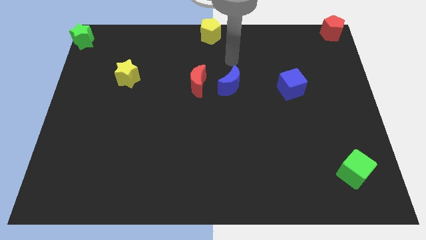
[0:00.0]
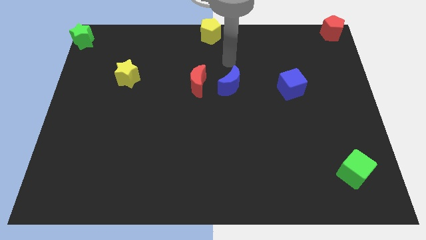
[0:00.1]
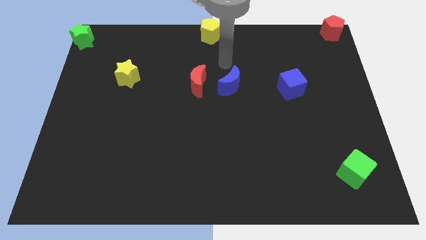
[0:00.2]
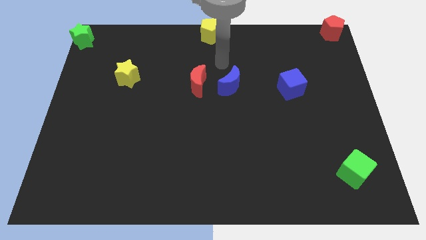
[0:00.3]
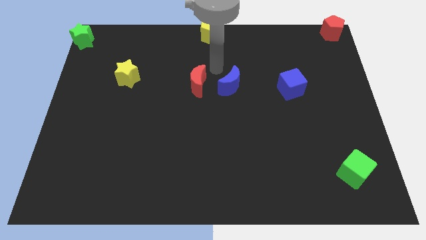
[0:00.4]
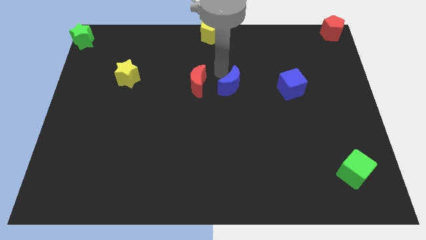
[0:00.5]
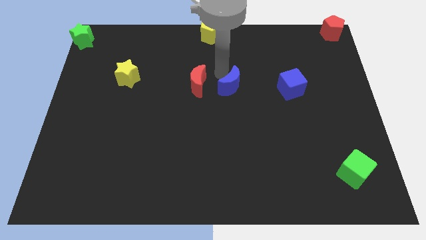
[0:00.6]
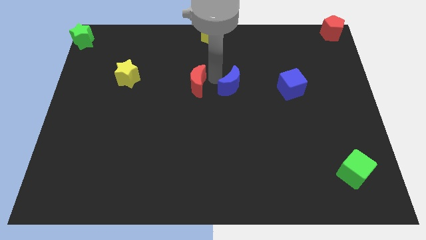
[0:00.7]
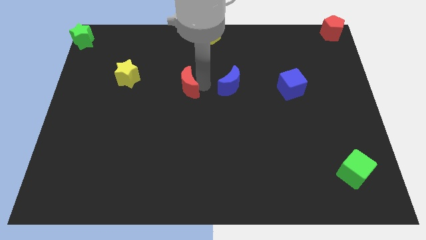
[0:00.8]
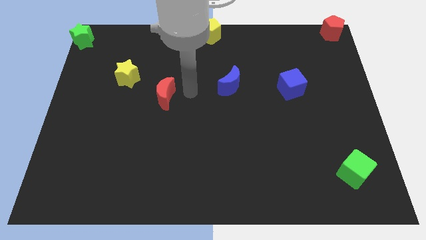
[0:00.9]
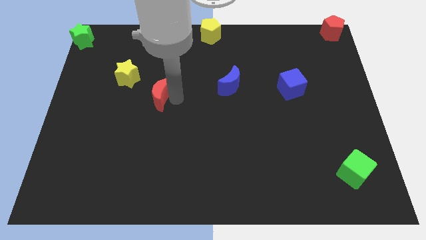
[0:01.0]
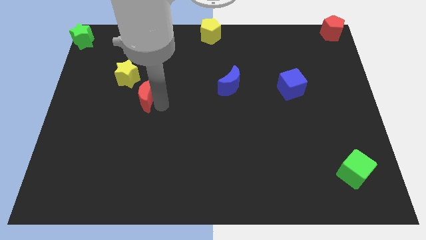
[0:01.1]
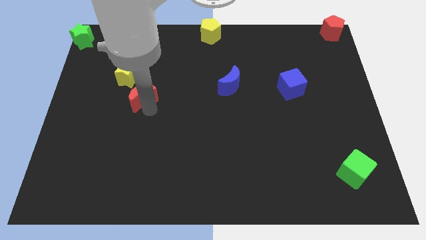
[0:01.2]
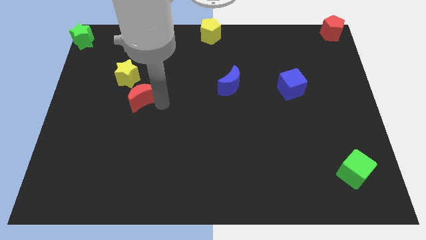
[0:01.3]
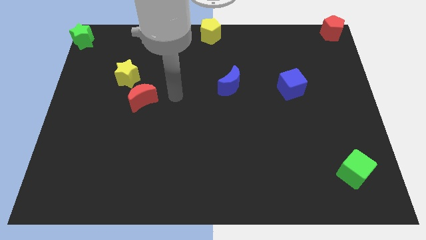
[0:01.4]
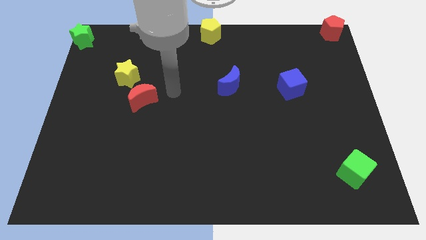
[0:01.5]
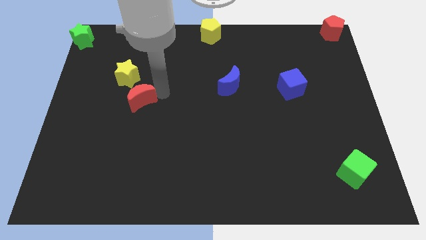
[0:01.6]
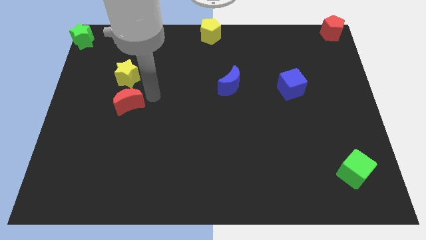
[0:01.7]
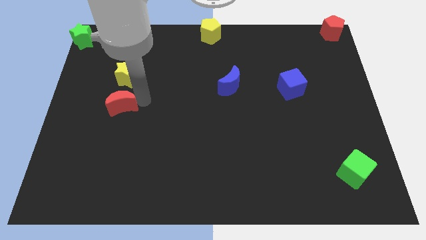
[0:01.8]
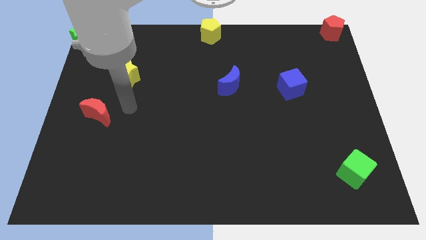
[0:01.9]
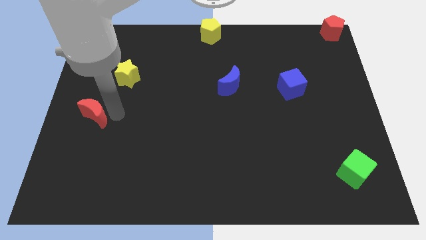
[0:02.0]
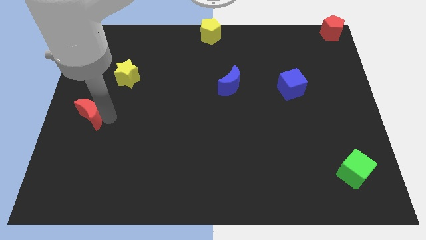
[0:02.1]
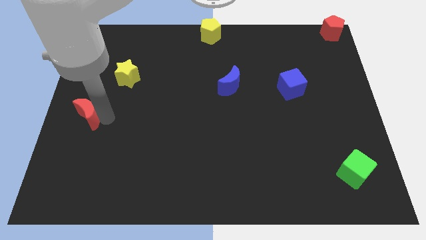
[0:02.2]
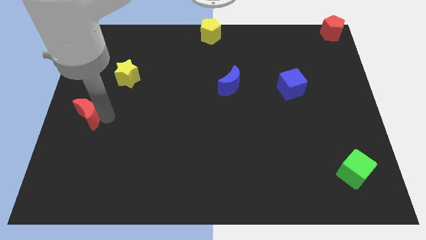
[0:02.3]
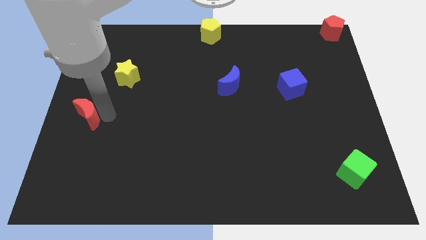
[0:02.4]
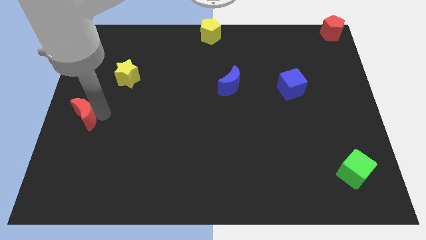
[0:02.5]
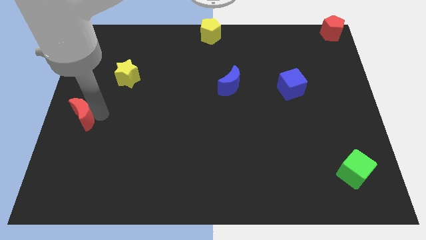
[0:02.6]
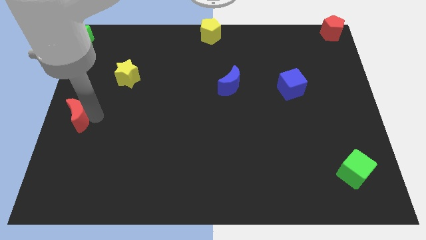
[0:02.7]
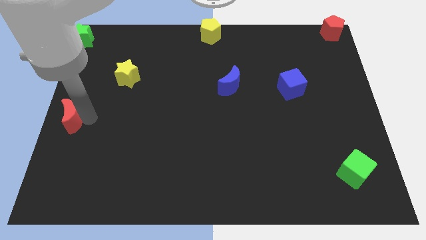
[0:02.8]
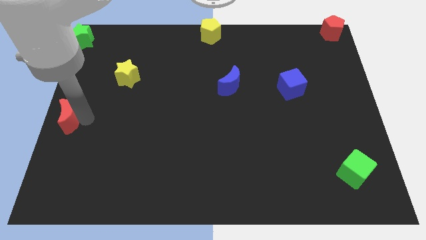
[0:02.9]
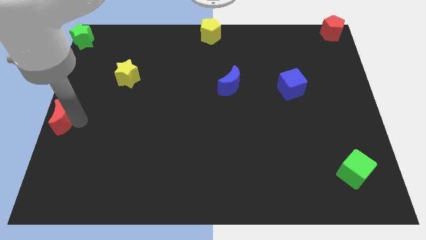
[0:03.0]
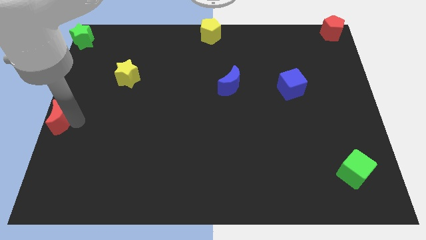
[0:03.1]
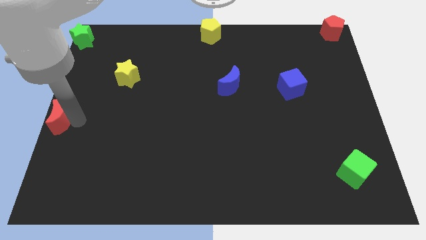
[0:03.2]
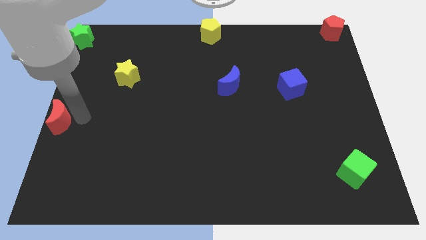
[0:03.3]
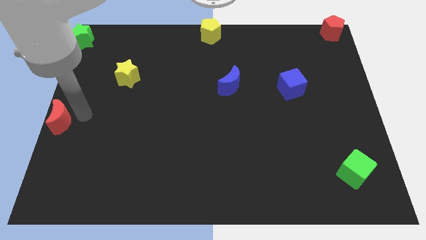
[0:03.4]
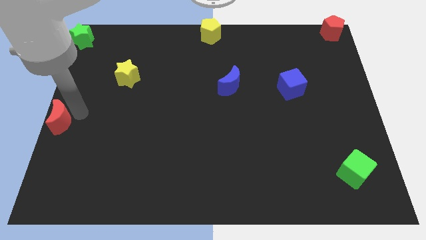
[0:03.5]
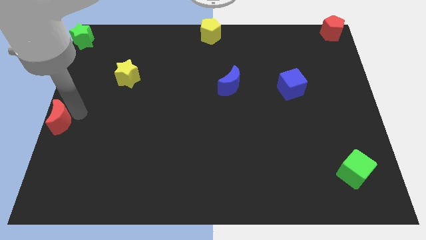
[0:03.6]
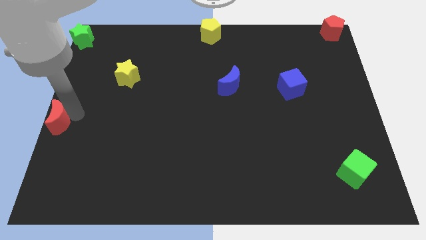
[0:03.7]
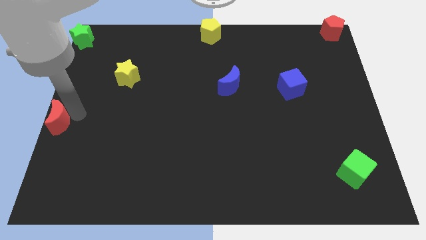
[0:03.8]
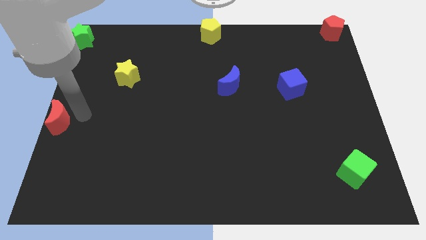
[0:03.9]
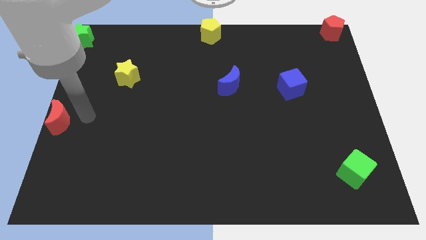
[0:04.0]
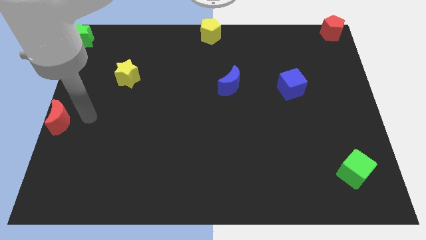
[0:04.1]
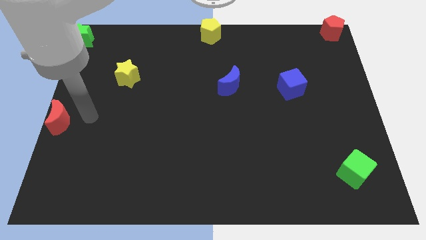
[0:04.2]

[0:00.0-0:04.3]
move the red crescent to the left center of the board

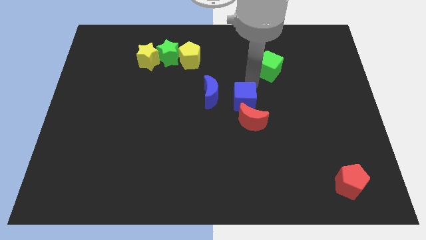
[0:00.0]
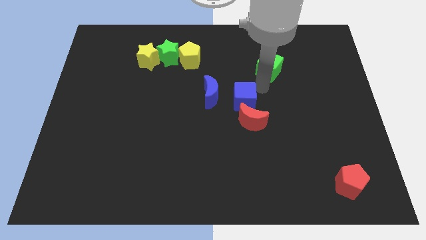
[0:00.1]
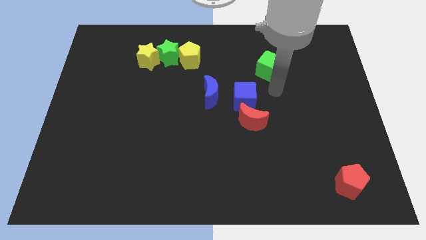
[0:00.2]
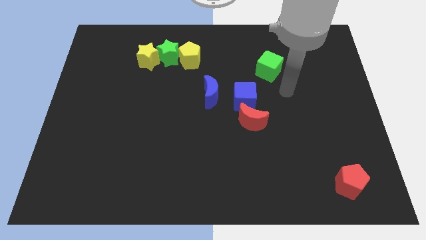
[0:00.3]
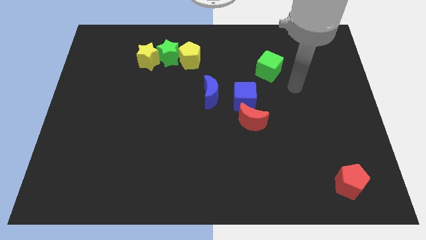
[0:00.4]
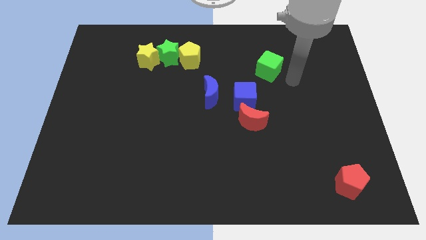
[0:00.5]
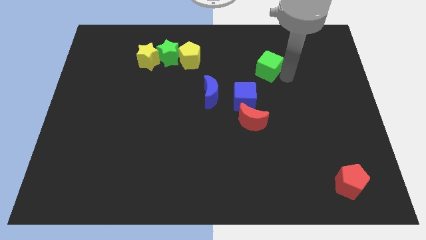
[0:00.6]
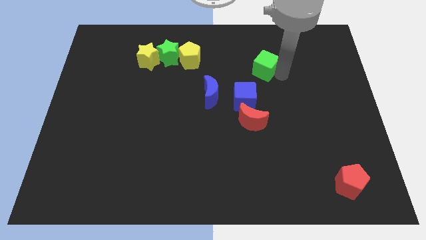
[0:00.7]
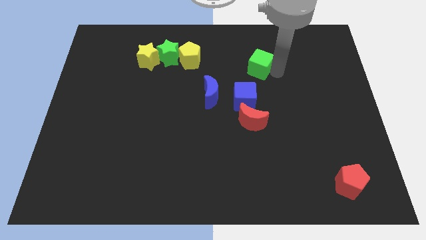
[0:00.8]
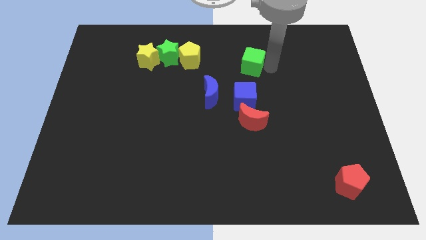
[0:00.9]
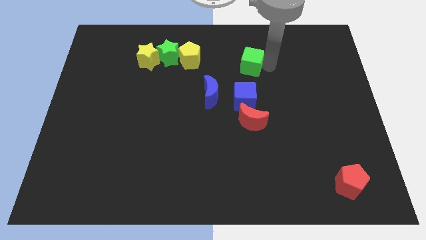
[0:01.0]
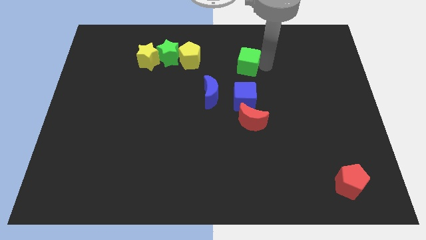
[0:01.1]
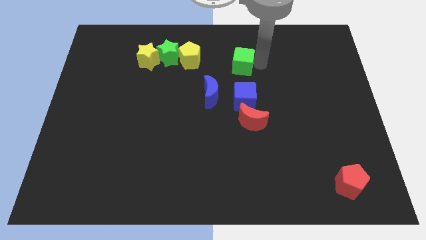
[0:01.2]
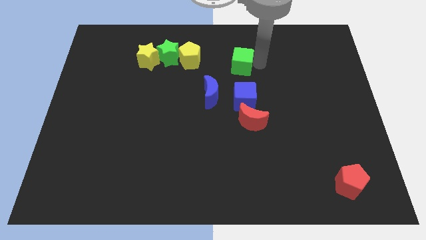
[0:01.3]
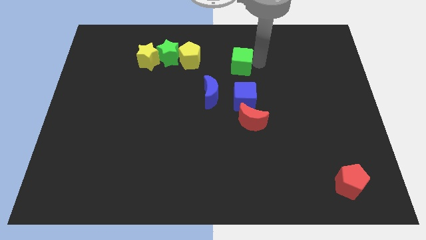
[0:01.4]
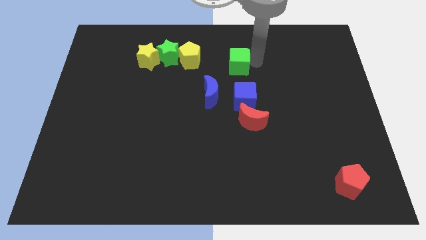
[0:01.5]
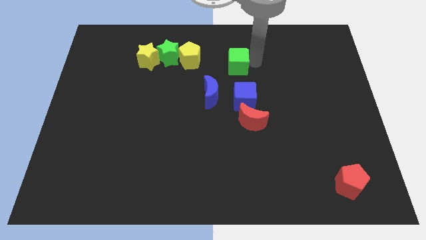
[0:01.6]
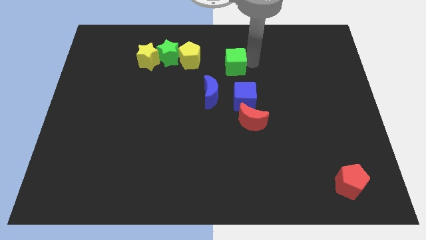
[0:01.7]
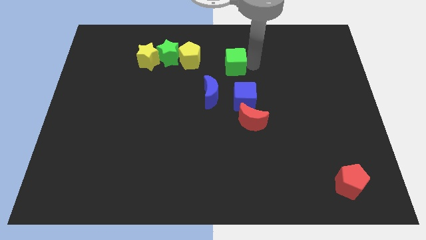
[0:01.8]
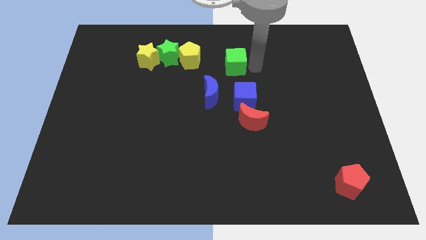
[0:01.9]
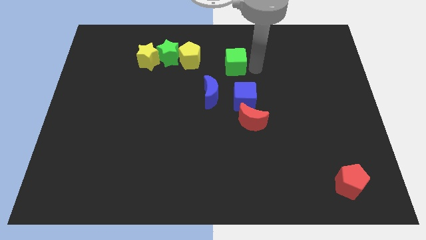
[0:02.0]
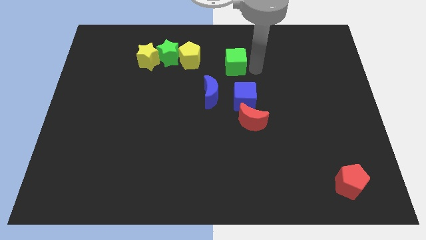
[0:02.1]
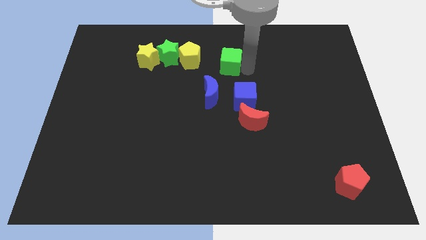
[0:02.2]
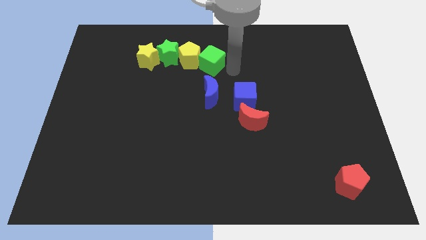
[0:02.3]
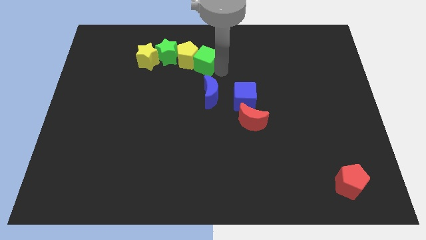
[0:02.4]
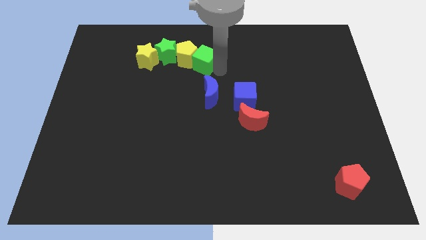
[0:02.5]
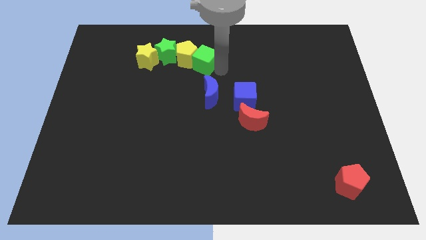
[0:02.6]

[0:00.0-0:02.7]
push the green cube into the yellow pentagon

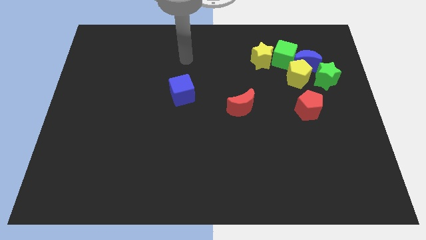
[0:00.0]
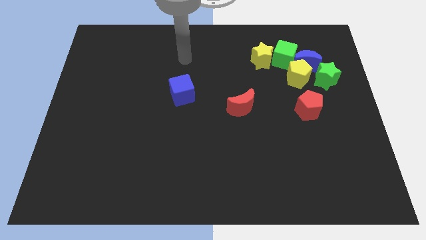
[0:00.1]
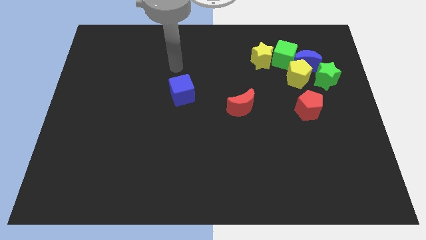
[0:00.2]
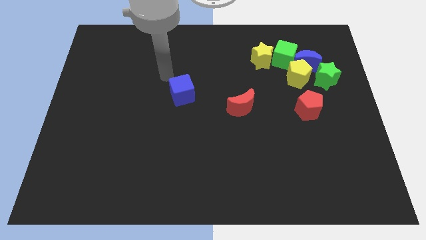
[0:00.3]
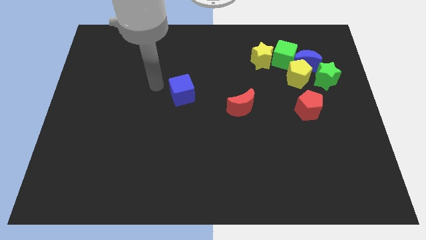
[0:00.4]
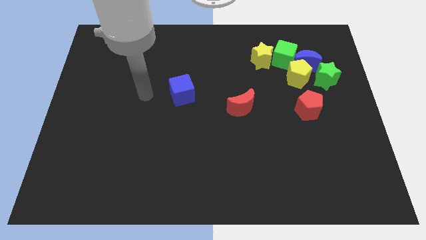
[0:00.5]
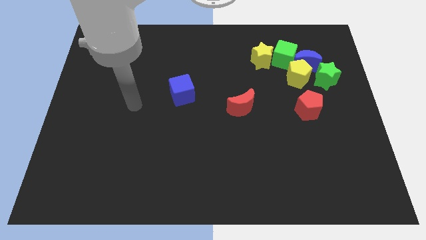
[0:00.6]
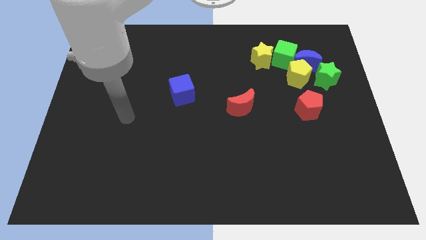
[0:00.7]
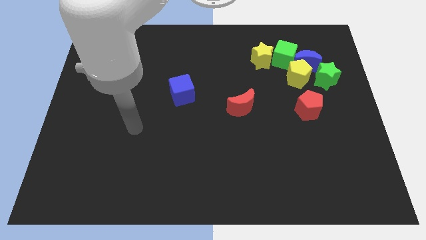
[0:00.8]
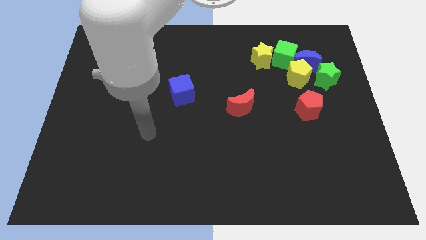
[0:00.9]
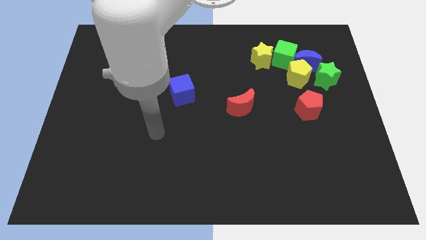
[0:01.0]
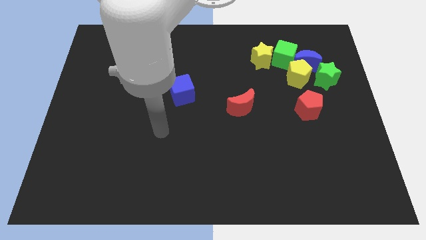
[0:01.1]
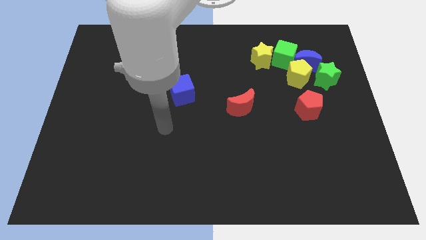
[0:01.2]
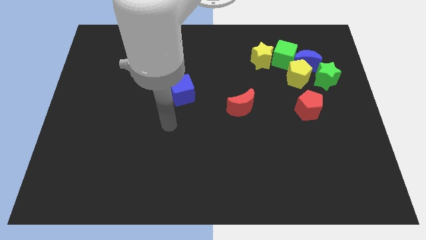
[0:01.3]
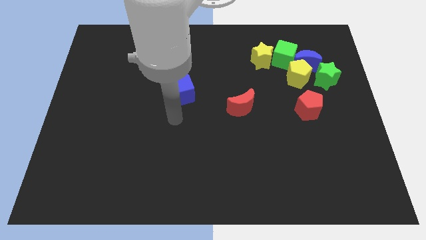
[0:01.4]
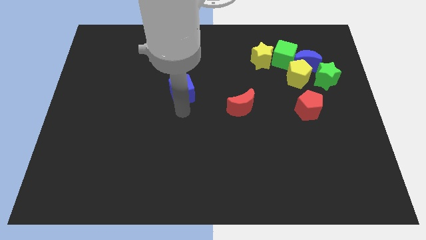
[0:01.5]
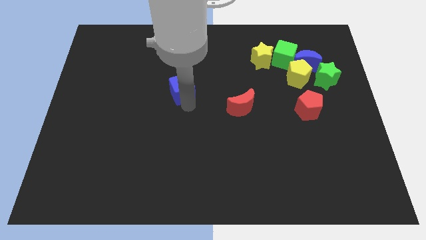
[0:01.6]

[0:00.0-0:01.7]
place the arm below the blue cube

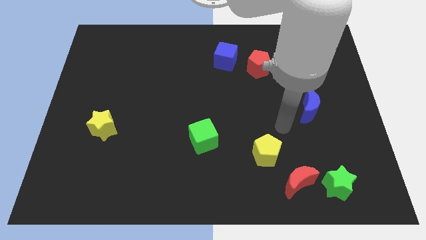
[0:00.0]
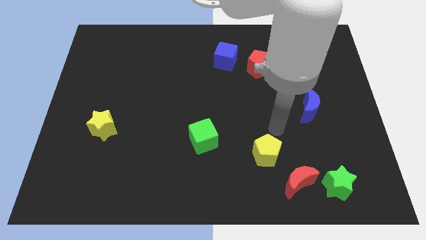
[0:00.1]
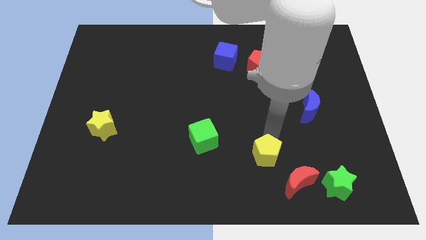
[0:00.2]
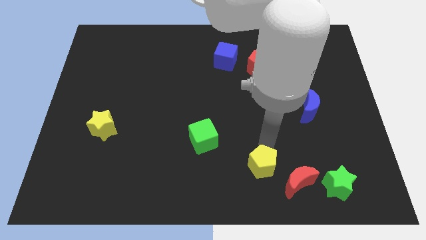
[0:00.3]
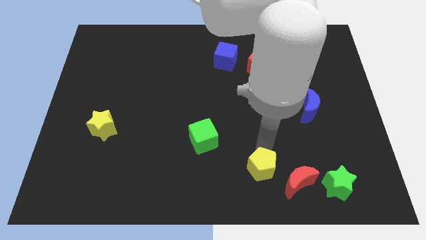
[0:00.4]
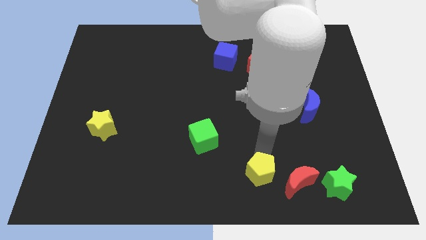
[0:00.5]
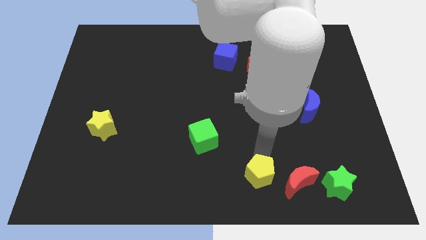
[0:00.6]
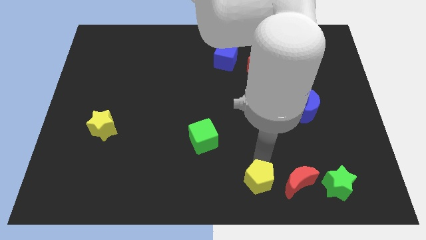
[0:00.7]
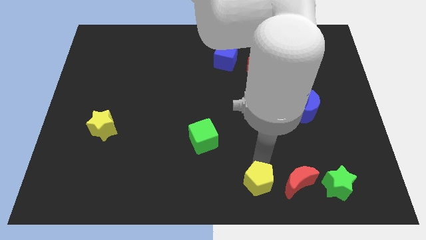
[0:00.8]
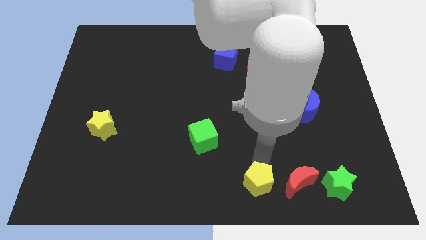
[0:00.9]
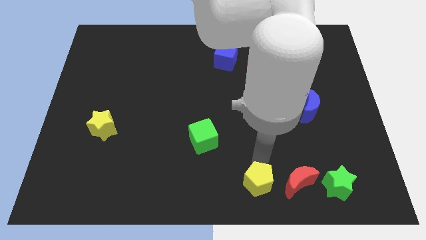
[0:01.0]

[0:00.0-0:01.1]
slide yellow pentagon to the left red moon
